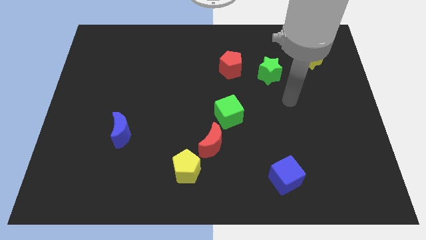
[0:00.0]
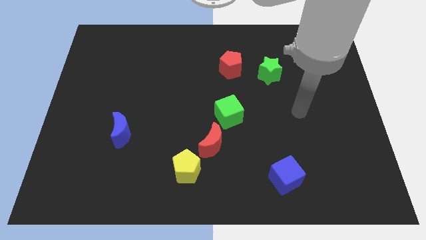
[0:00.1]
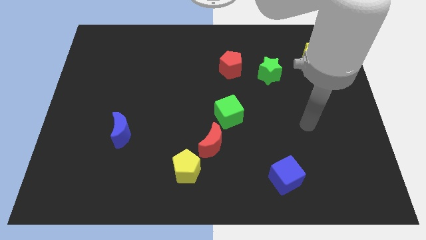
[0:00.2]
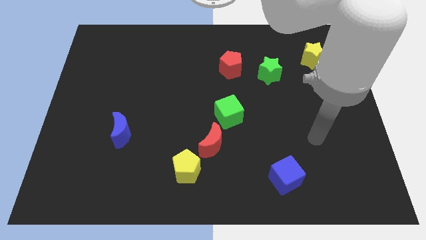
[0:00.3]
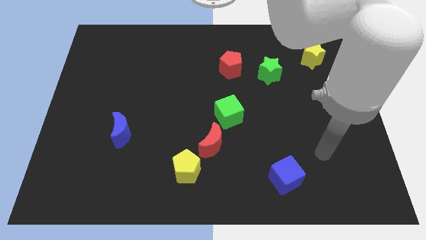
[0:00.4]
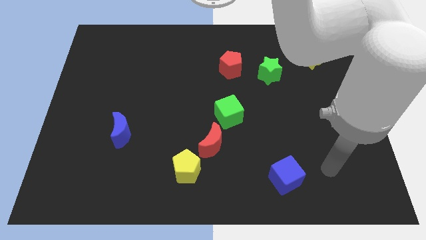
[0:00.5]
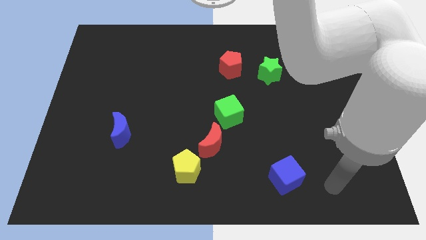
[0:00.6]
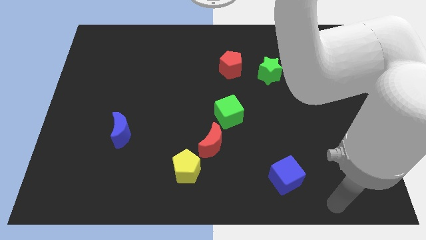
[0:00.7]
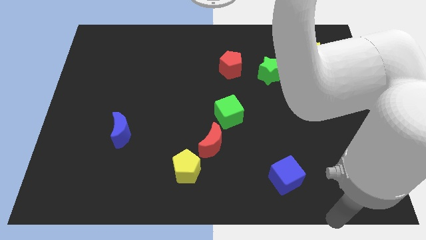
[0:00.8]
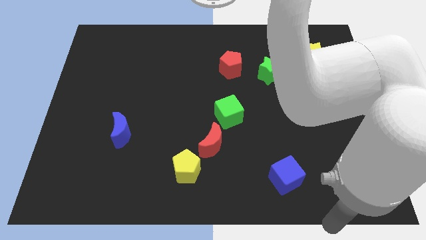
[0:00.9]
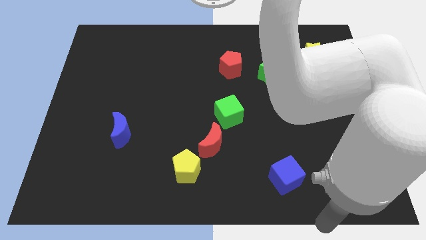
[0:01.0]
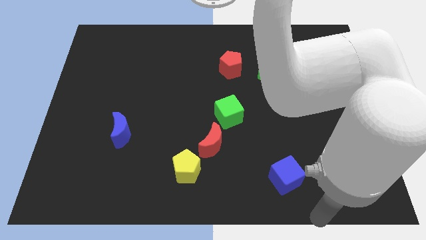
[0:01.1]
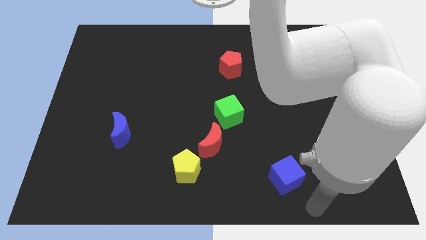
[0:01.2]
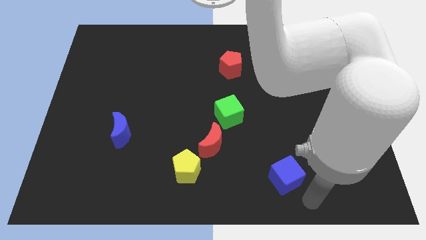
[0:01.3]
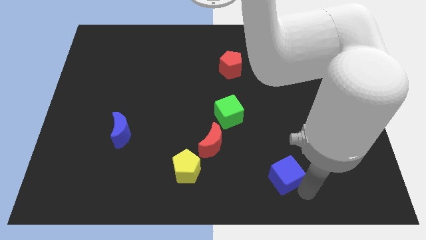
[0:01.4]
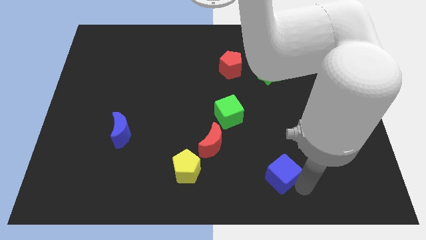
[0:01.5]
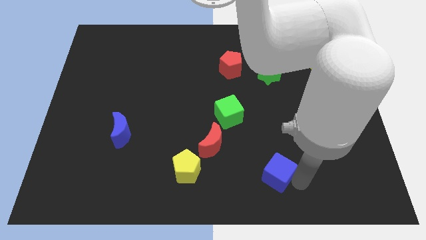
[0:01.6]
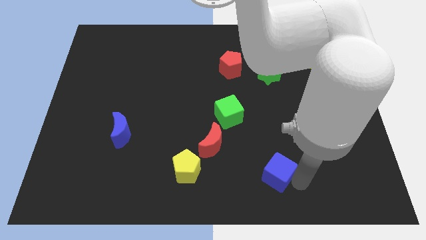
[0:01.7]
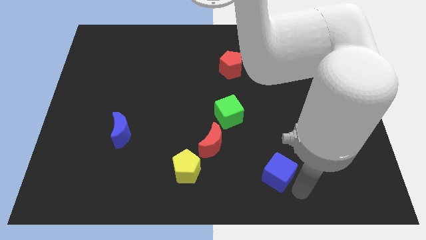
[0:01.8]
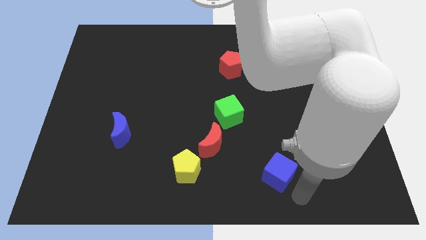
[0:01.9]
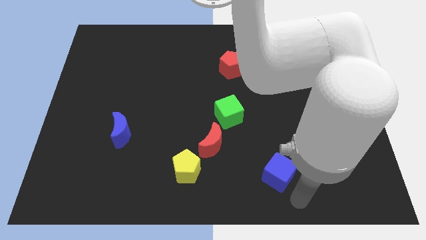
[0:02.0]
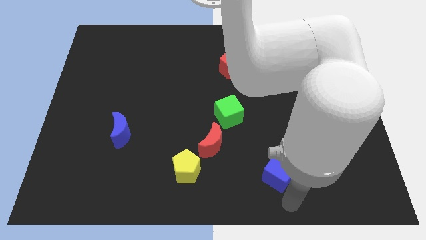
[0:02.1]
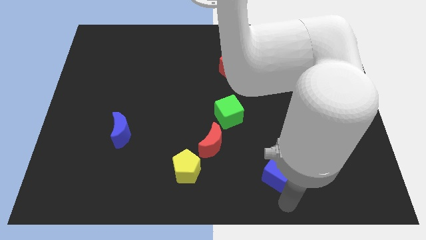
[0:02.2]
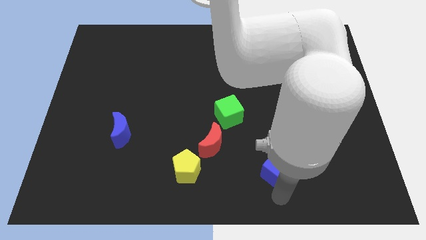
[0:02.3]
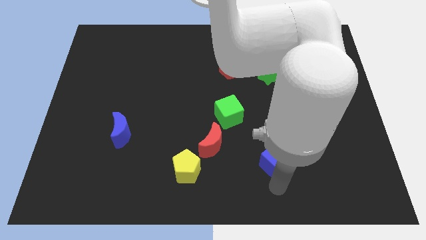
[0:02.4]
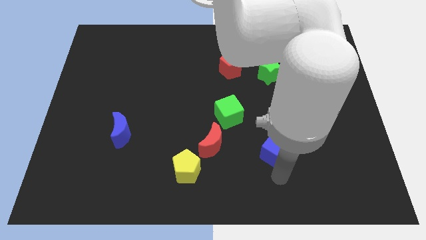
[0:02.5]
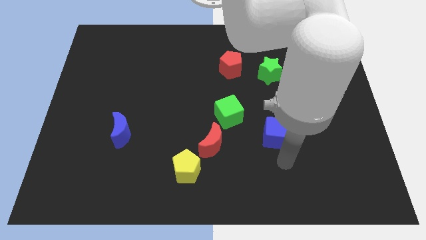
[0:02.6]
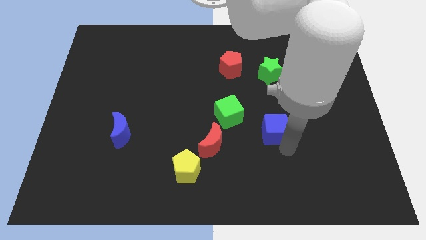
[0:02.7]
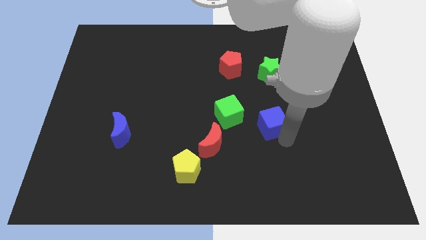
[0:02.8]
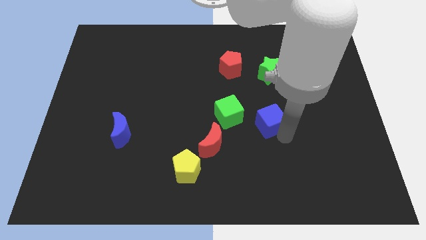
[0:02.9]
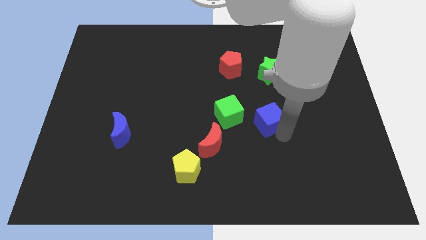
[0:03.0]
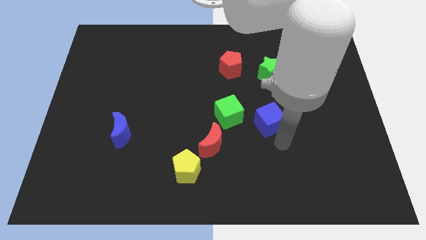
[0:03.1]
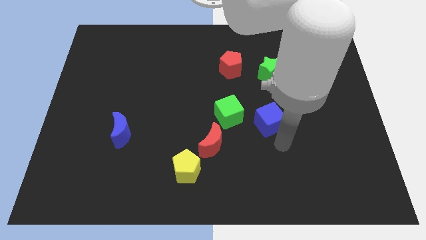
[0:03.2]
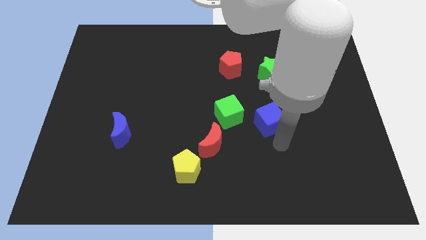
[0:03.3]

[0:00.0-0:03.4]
move the blue cube to the right of the green cube

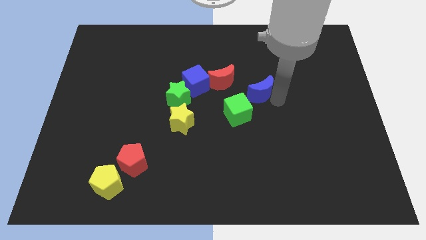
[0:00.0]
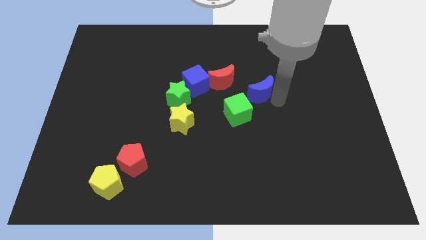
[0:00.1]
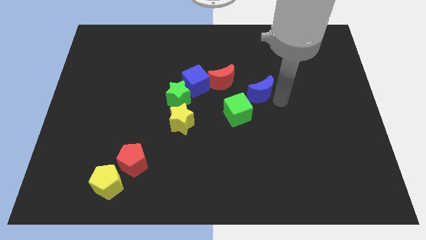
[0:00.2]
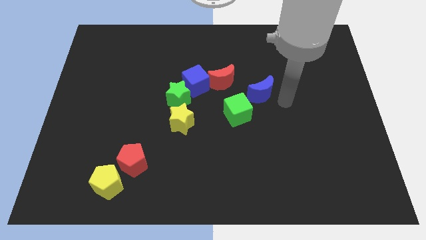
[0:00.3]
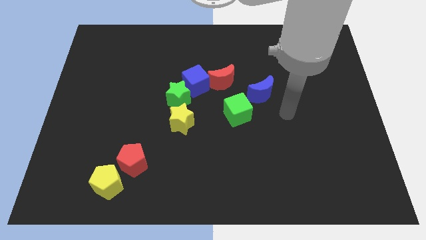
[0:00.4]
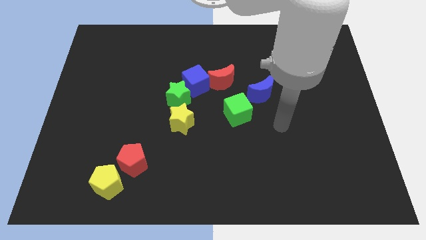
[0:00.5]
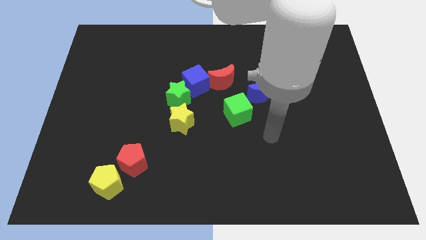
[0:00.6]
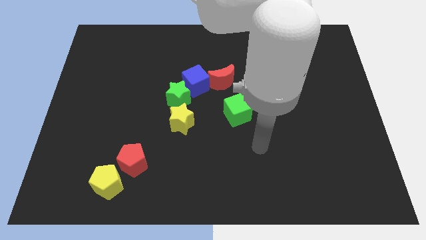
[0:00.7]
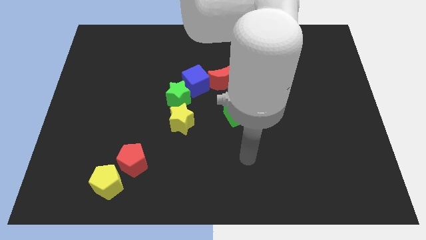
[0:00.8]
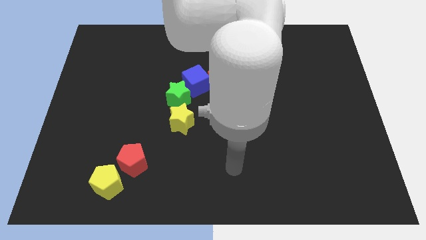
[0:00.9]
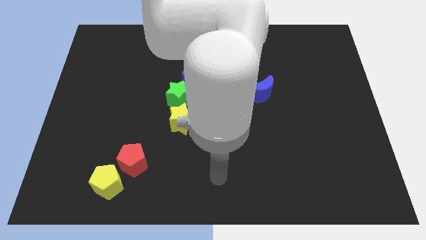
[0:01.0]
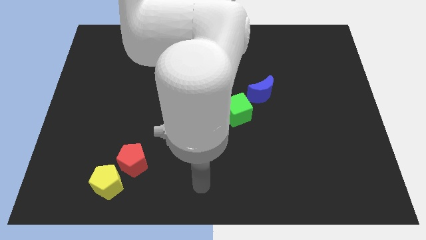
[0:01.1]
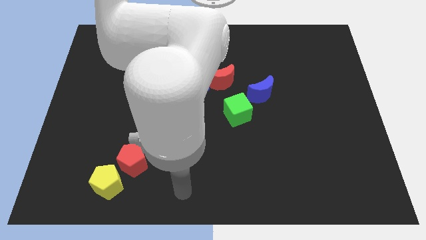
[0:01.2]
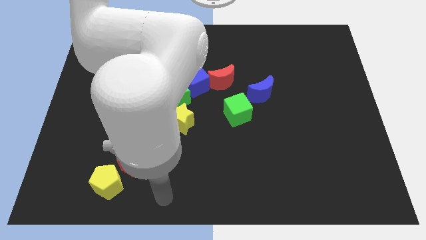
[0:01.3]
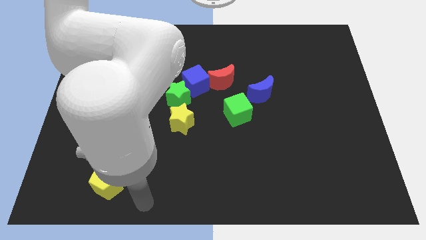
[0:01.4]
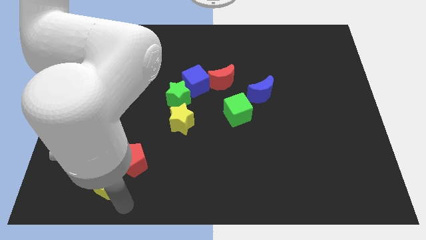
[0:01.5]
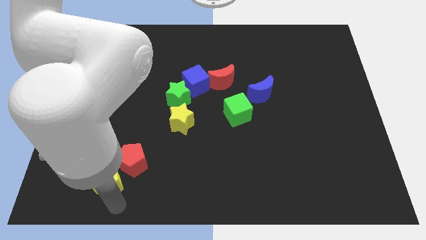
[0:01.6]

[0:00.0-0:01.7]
move your arm away from the blue moon

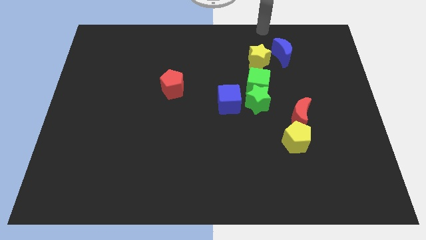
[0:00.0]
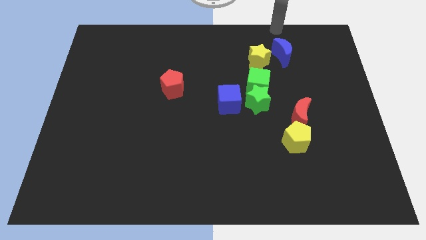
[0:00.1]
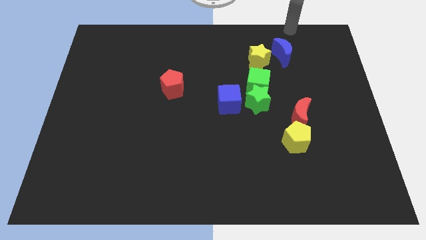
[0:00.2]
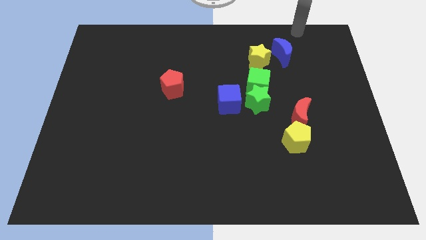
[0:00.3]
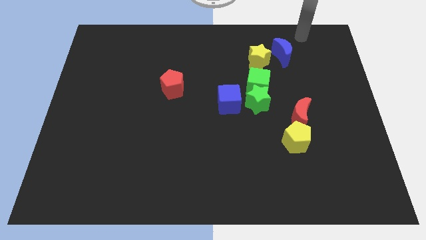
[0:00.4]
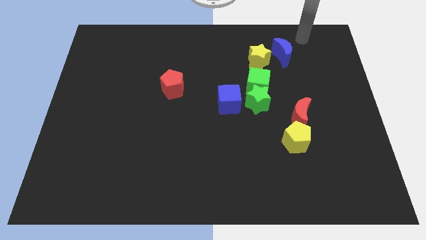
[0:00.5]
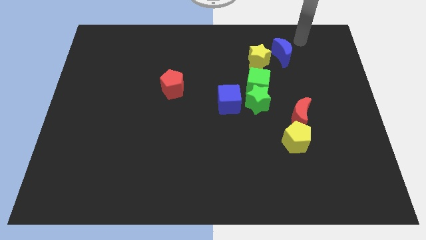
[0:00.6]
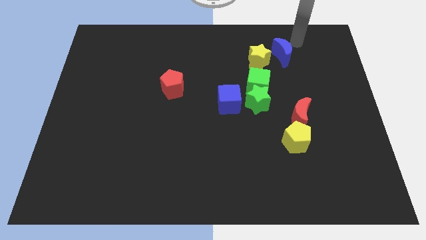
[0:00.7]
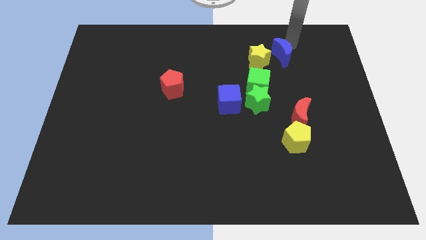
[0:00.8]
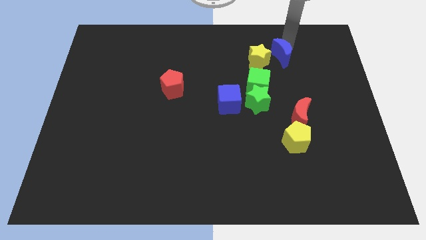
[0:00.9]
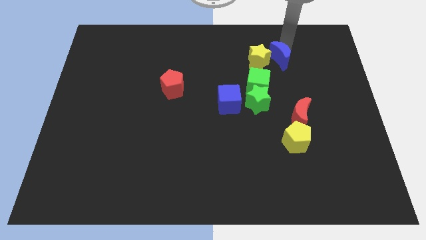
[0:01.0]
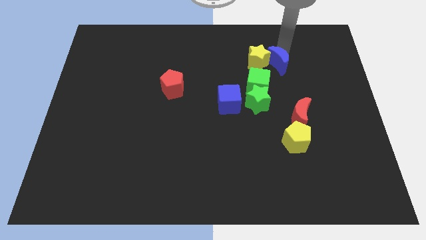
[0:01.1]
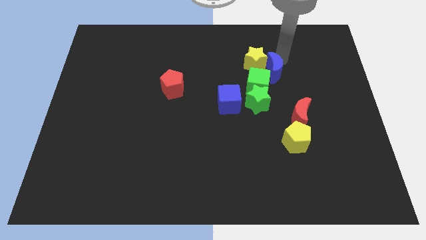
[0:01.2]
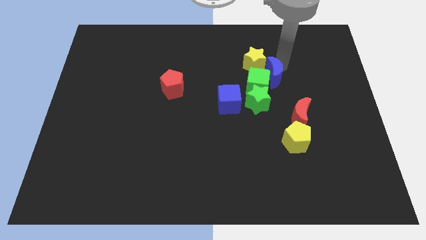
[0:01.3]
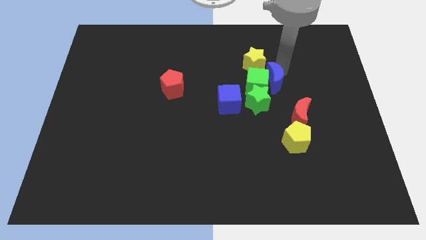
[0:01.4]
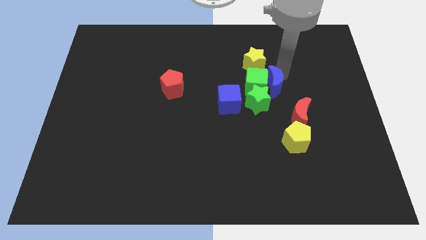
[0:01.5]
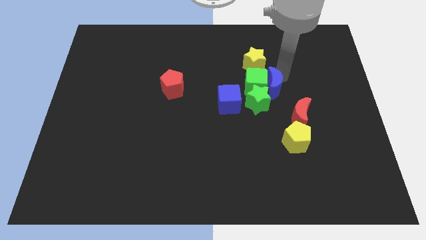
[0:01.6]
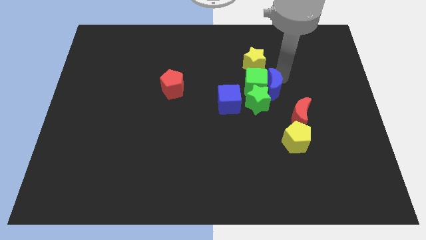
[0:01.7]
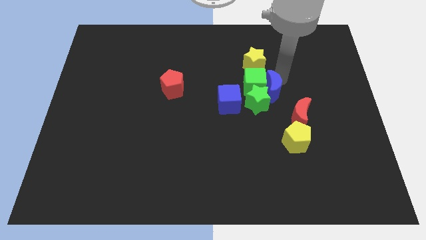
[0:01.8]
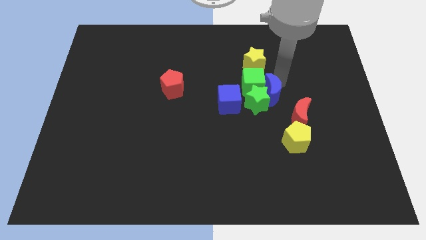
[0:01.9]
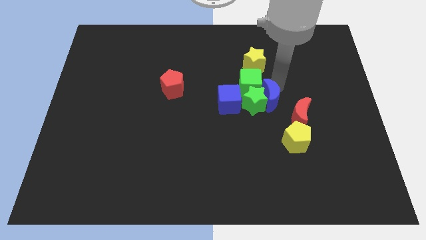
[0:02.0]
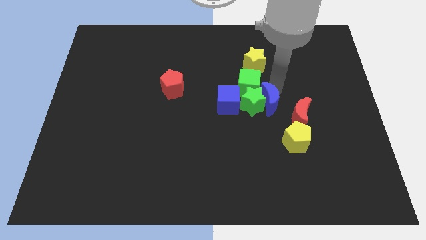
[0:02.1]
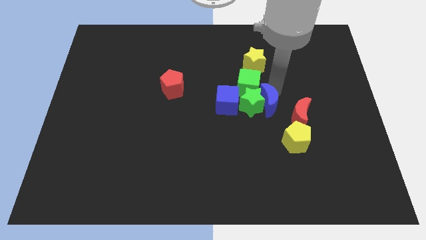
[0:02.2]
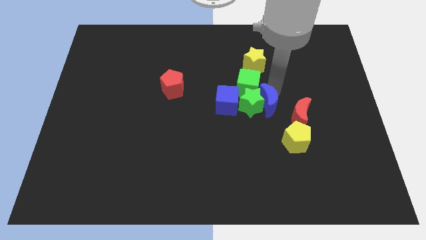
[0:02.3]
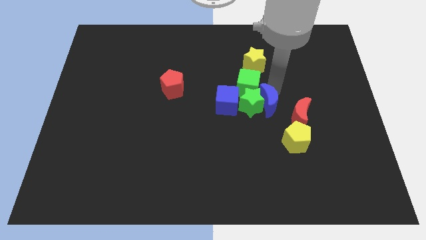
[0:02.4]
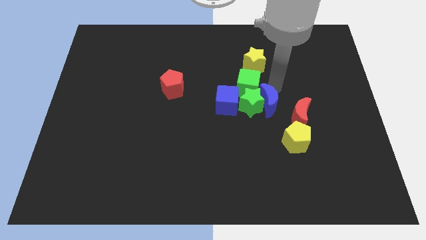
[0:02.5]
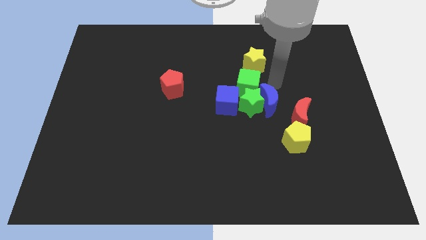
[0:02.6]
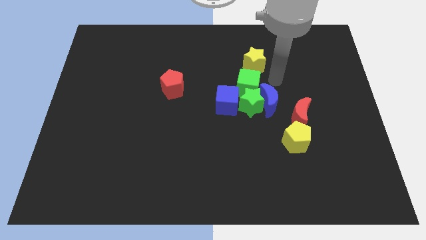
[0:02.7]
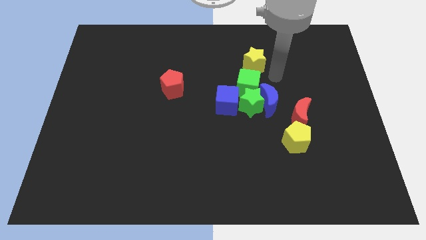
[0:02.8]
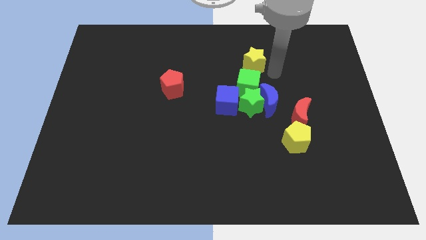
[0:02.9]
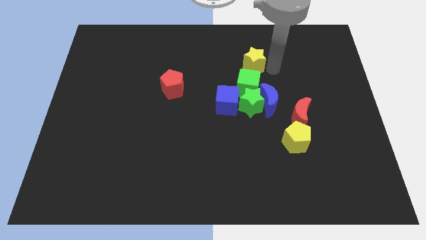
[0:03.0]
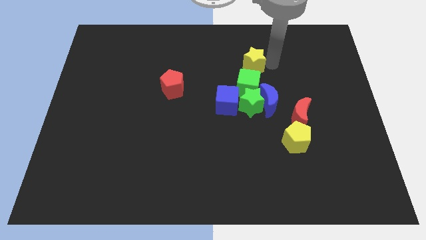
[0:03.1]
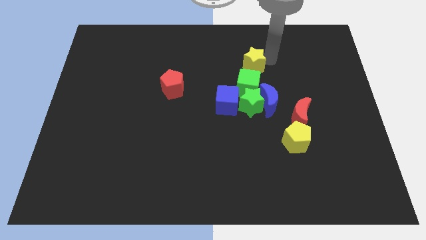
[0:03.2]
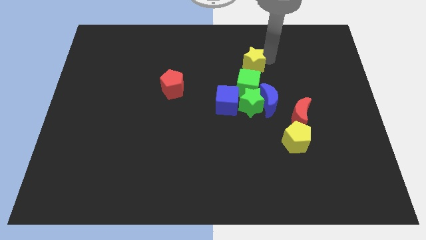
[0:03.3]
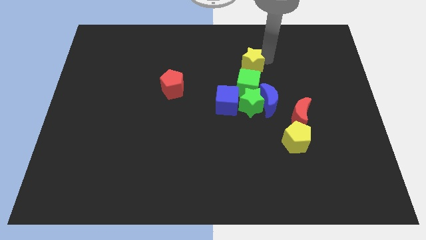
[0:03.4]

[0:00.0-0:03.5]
move the blue crescent into the green star

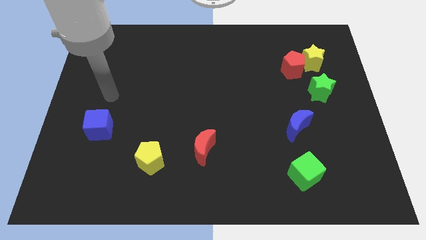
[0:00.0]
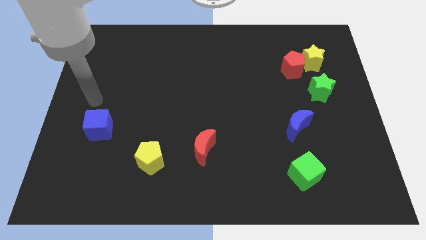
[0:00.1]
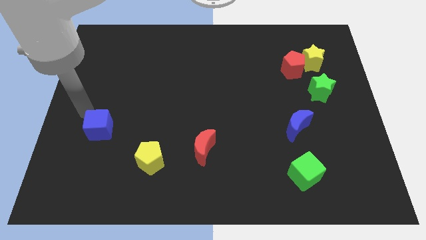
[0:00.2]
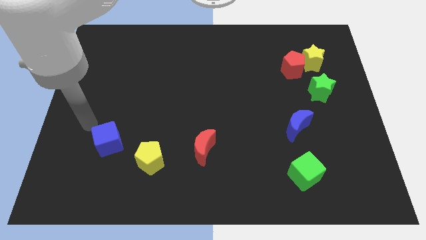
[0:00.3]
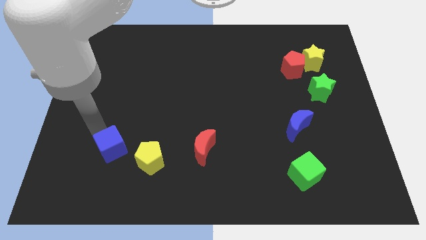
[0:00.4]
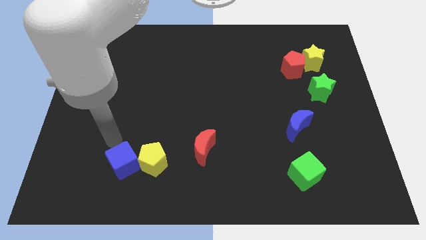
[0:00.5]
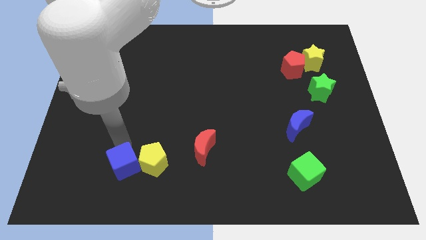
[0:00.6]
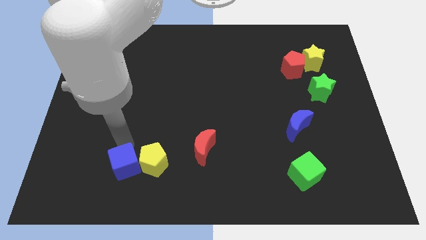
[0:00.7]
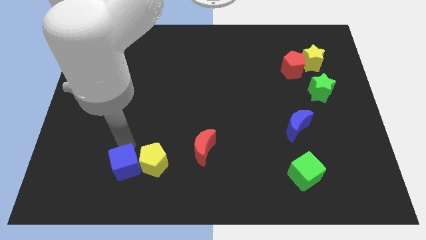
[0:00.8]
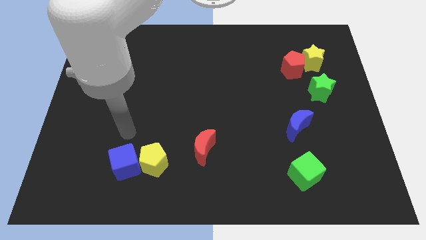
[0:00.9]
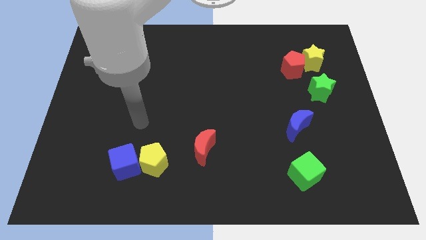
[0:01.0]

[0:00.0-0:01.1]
slide blue cube close to yellow pentagon
